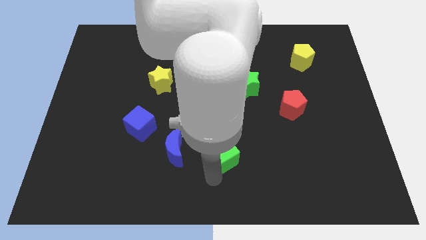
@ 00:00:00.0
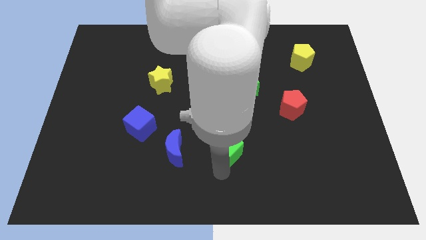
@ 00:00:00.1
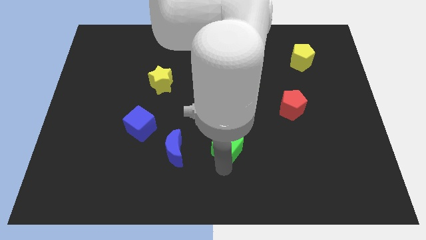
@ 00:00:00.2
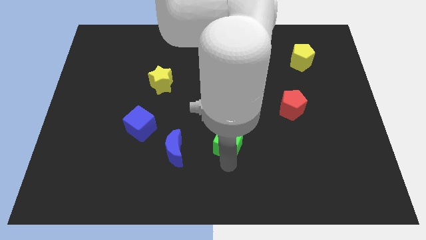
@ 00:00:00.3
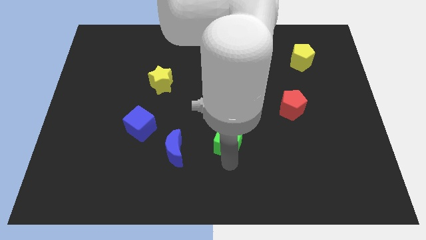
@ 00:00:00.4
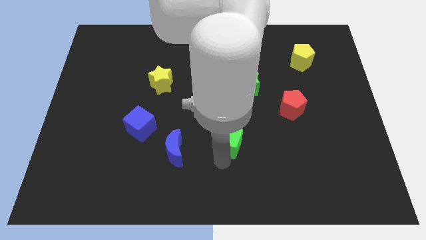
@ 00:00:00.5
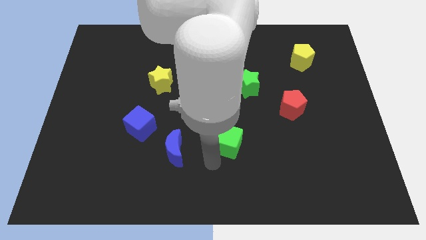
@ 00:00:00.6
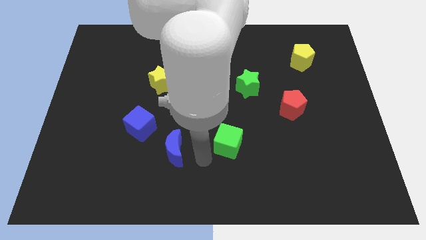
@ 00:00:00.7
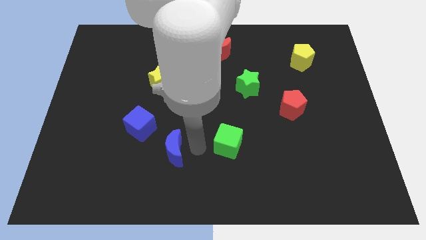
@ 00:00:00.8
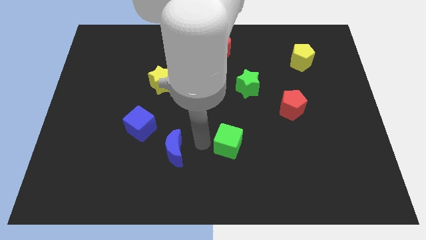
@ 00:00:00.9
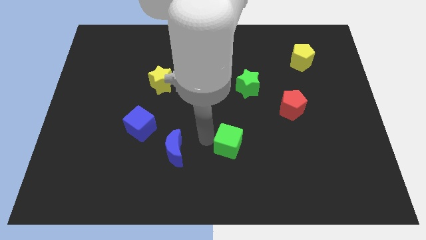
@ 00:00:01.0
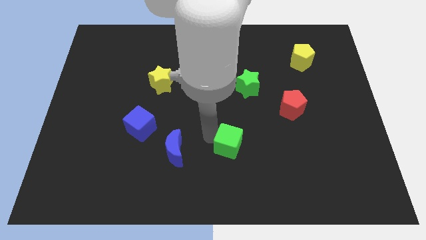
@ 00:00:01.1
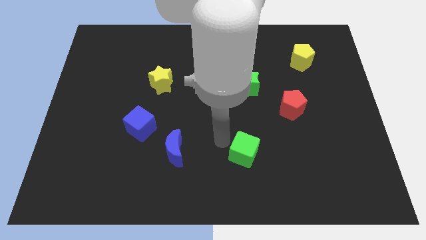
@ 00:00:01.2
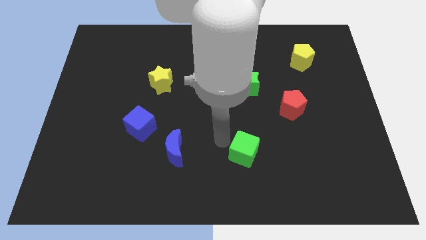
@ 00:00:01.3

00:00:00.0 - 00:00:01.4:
move the green cube diagonally

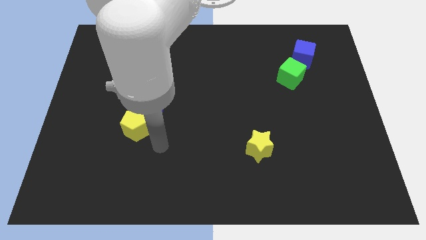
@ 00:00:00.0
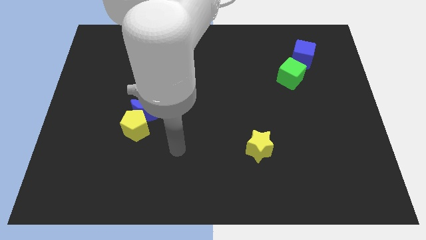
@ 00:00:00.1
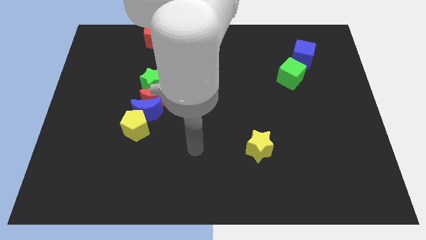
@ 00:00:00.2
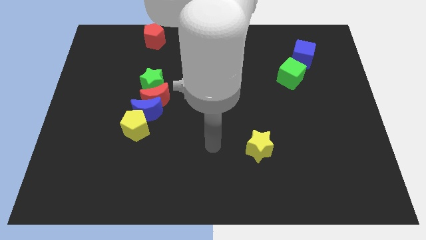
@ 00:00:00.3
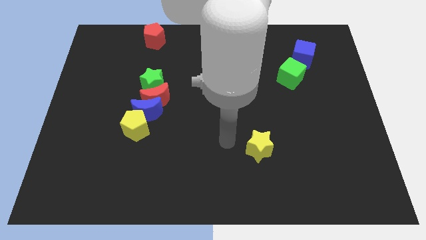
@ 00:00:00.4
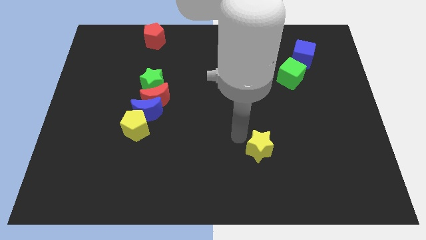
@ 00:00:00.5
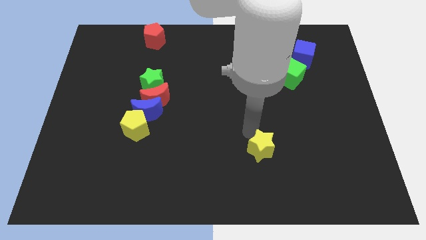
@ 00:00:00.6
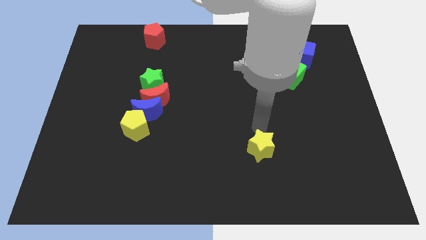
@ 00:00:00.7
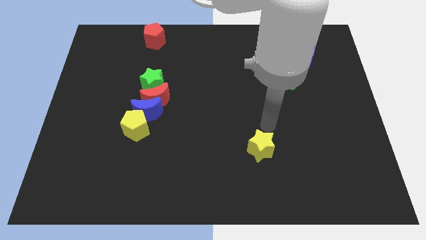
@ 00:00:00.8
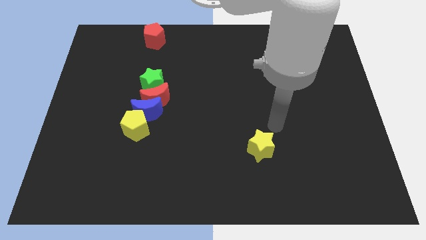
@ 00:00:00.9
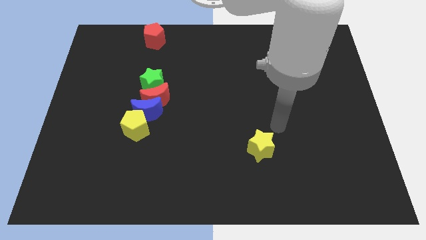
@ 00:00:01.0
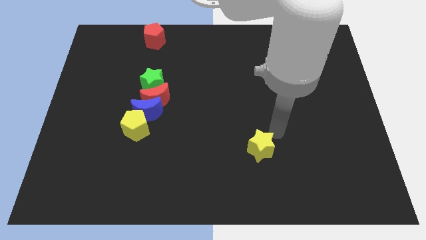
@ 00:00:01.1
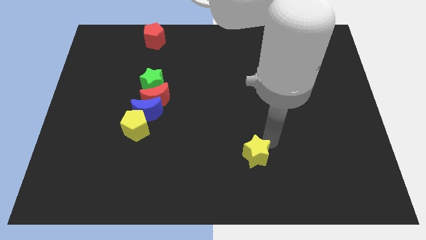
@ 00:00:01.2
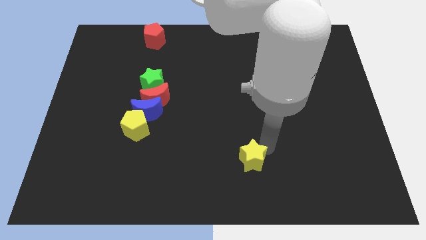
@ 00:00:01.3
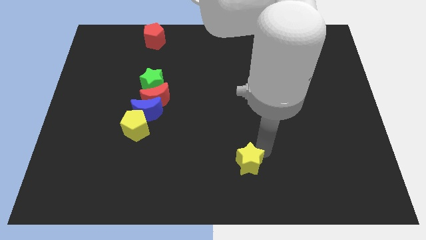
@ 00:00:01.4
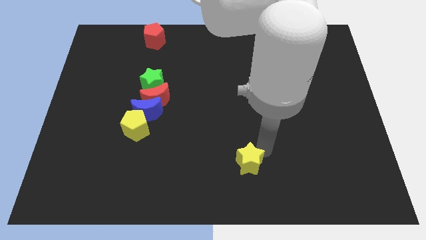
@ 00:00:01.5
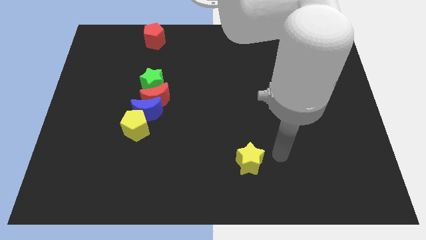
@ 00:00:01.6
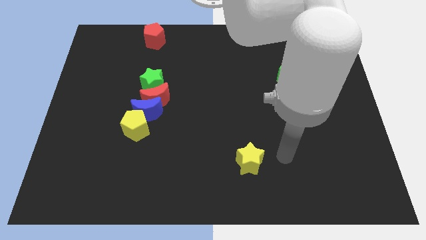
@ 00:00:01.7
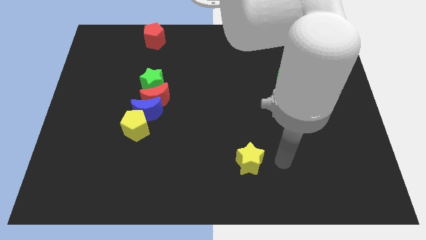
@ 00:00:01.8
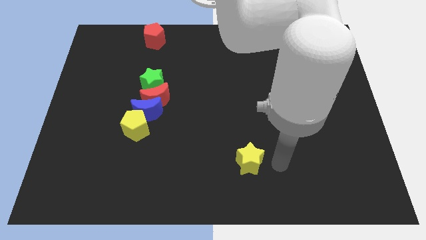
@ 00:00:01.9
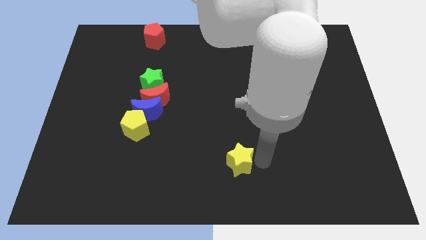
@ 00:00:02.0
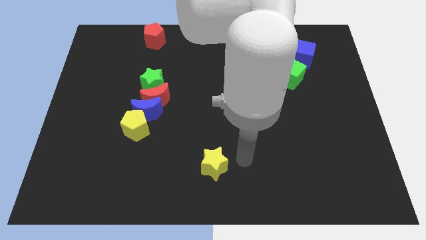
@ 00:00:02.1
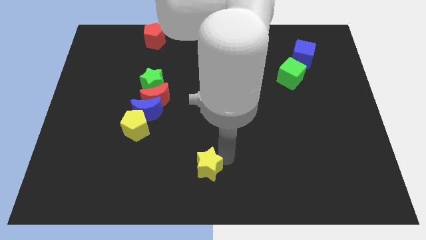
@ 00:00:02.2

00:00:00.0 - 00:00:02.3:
move the yellow star to the bottom center

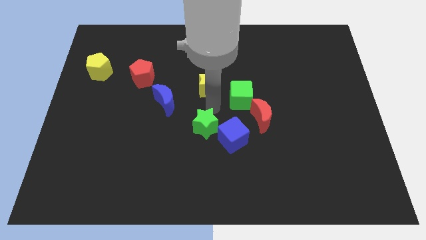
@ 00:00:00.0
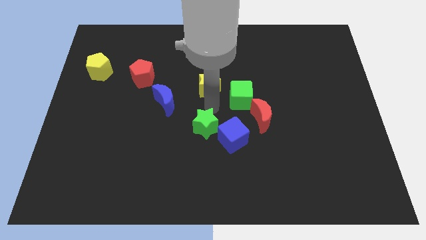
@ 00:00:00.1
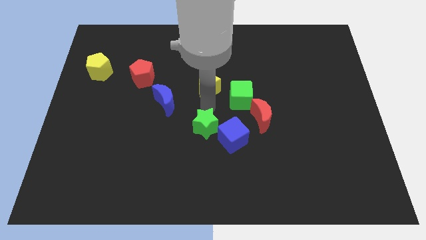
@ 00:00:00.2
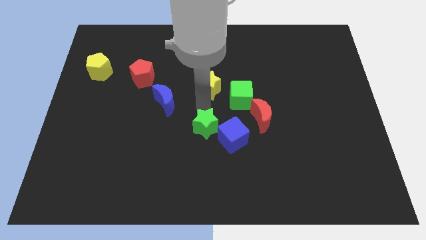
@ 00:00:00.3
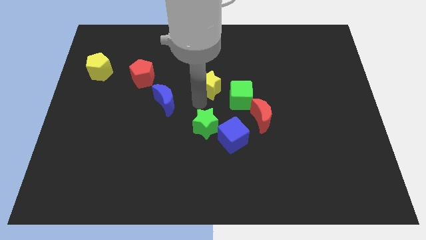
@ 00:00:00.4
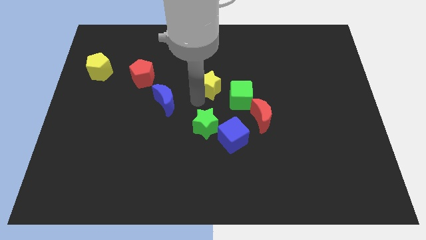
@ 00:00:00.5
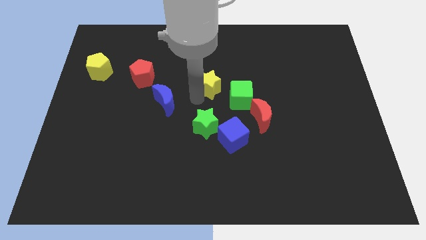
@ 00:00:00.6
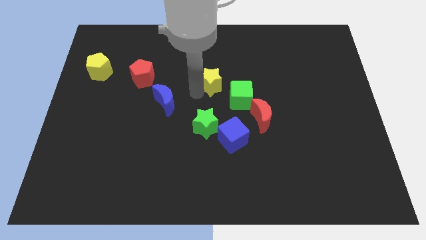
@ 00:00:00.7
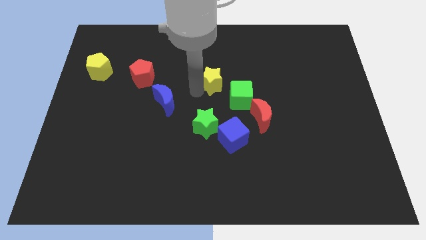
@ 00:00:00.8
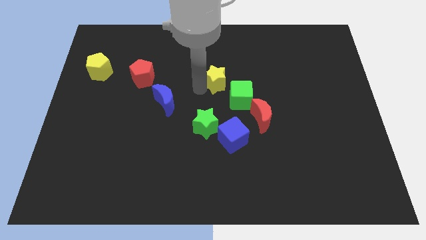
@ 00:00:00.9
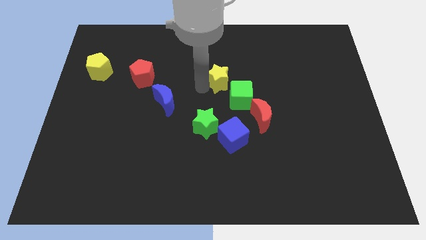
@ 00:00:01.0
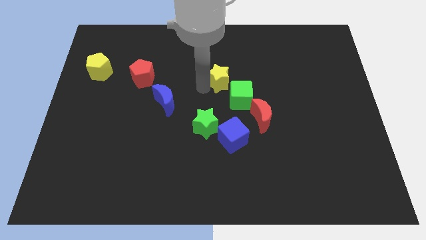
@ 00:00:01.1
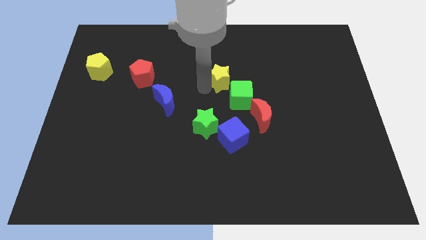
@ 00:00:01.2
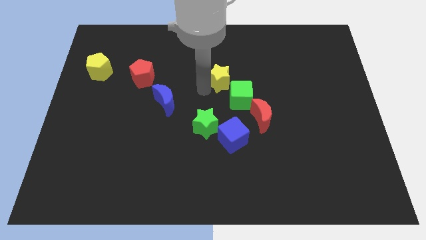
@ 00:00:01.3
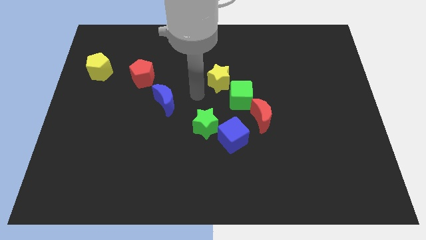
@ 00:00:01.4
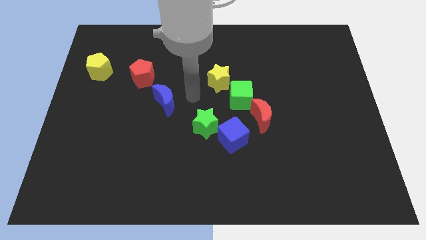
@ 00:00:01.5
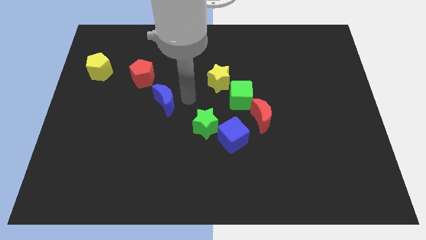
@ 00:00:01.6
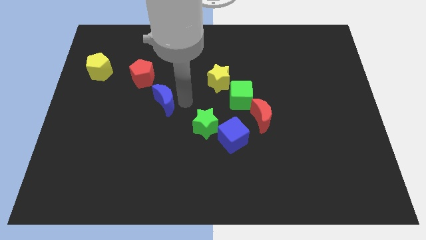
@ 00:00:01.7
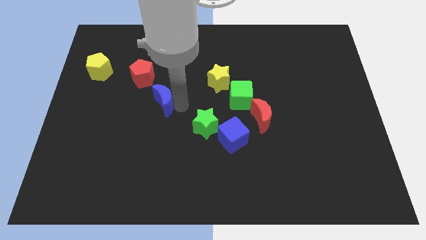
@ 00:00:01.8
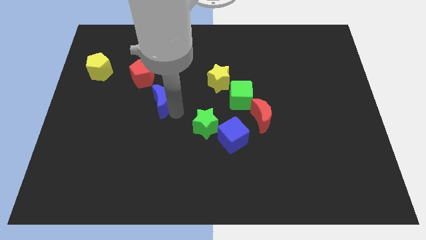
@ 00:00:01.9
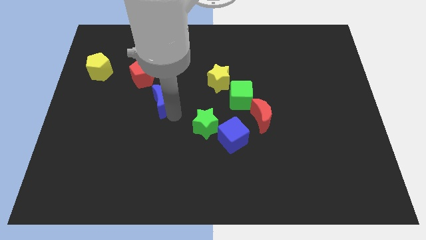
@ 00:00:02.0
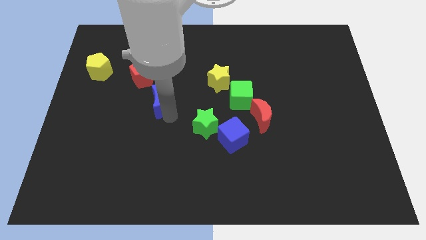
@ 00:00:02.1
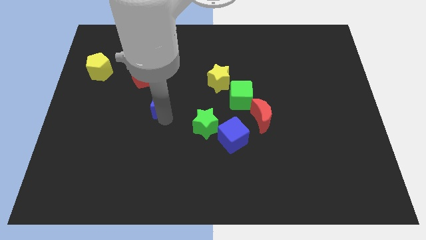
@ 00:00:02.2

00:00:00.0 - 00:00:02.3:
point yourself below blue moon

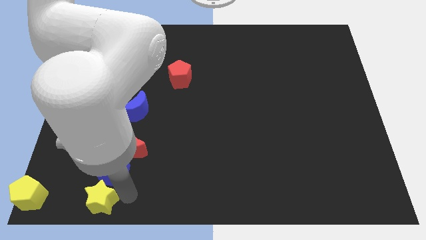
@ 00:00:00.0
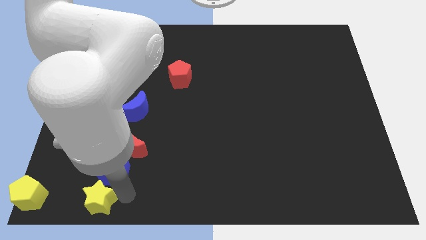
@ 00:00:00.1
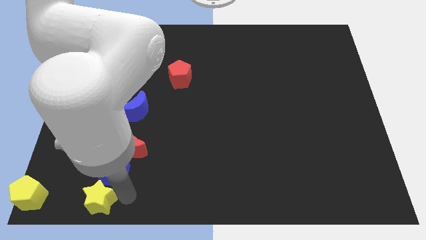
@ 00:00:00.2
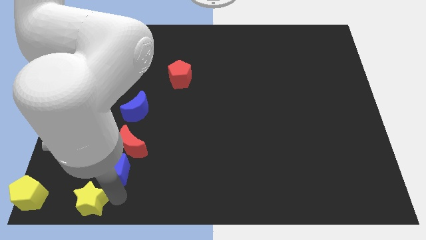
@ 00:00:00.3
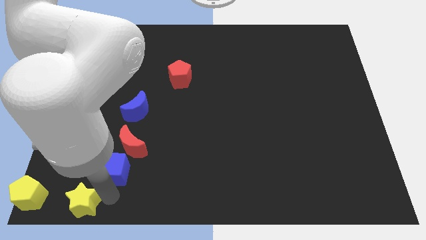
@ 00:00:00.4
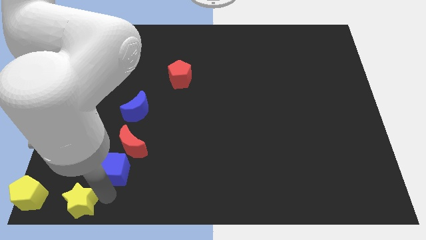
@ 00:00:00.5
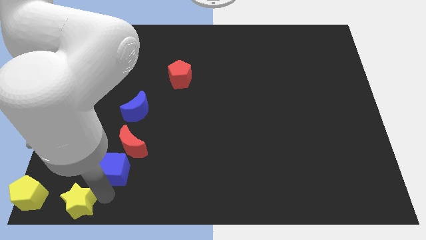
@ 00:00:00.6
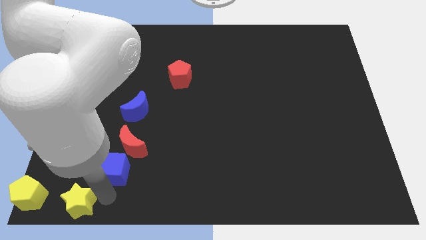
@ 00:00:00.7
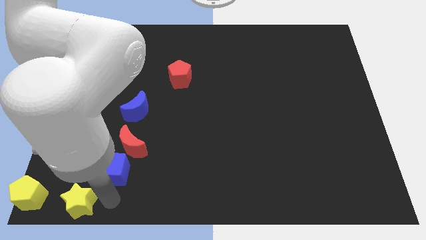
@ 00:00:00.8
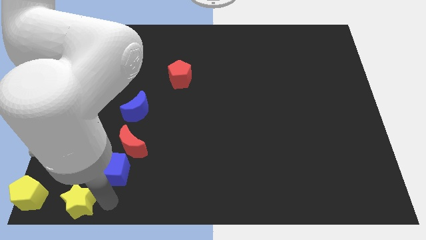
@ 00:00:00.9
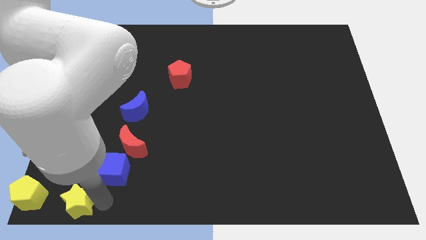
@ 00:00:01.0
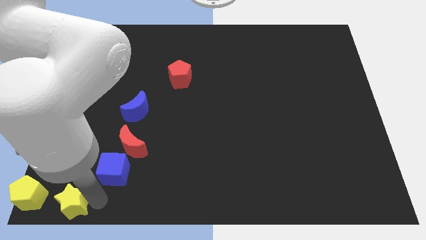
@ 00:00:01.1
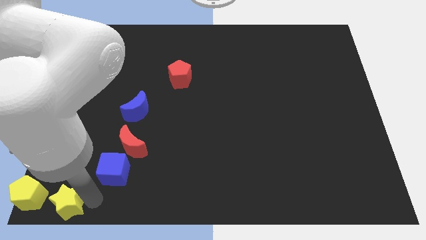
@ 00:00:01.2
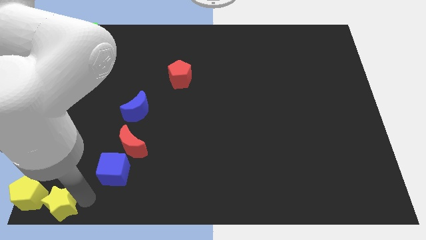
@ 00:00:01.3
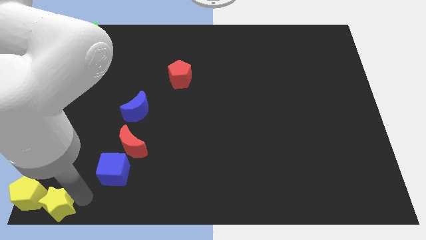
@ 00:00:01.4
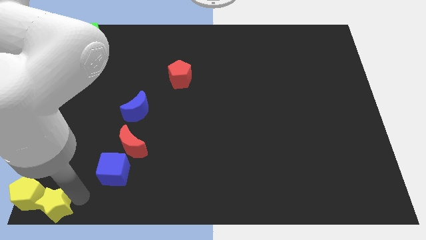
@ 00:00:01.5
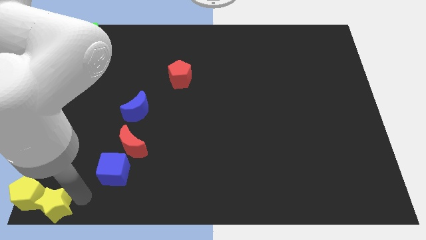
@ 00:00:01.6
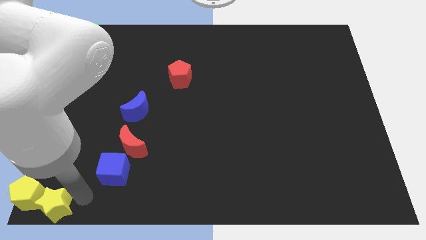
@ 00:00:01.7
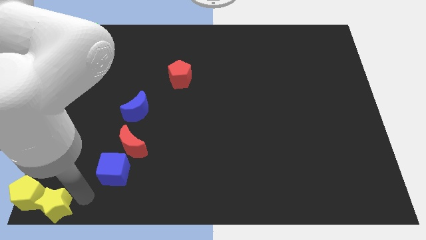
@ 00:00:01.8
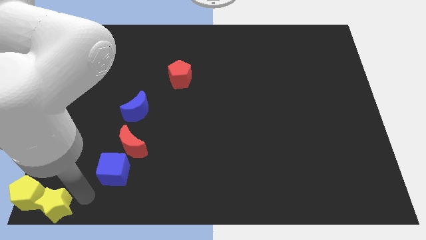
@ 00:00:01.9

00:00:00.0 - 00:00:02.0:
move the yellow star towards the bottom left

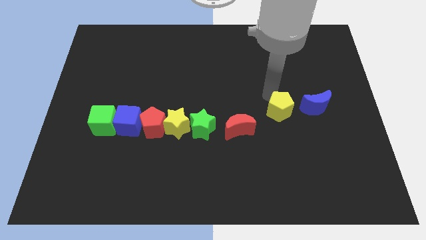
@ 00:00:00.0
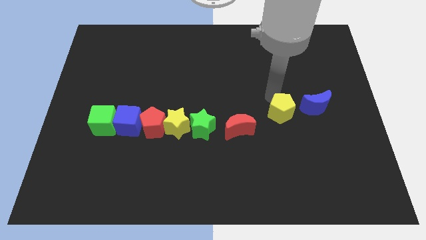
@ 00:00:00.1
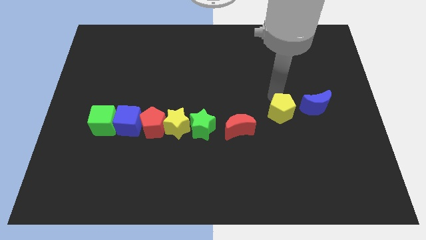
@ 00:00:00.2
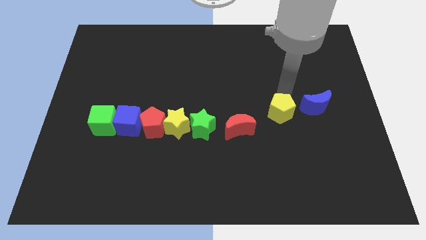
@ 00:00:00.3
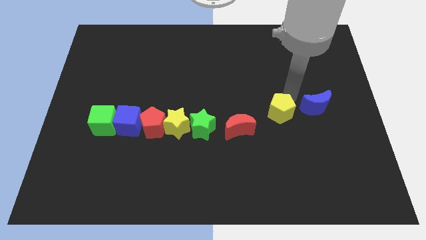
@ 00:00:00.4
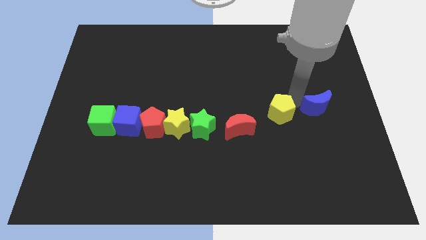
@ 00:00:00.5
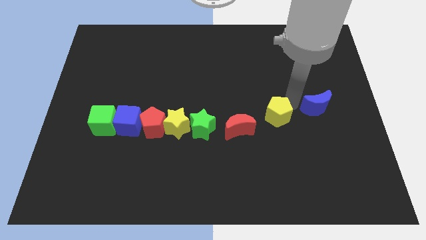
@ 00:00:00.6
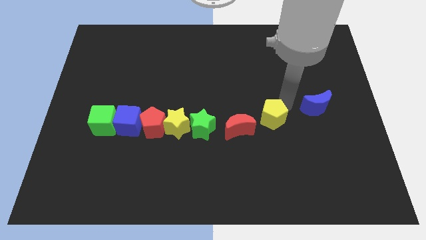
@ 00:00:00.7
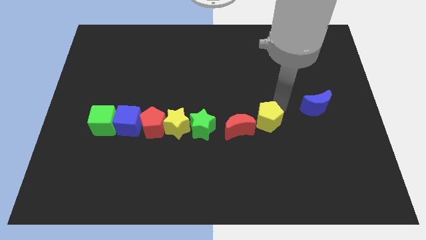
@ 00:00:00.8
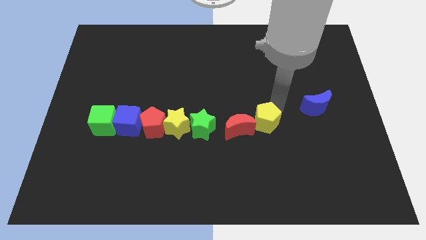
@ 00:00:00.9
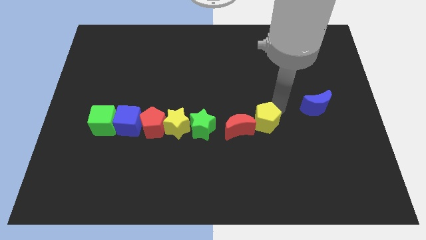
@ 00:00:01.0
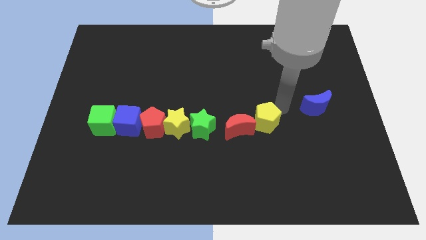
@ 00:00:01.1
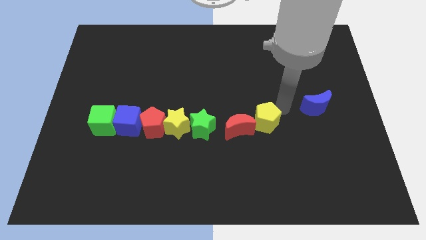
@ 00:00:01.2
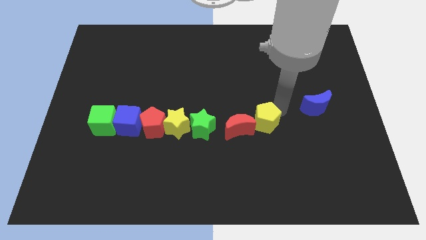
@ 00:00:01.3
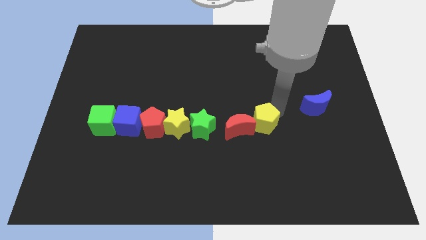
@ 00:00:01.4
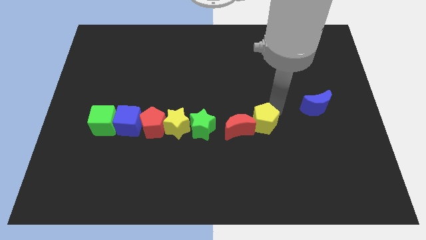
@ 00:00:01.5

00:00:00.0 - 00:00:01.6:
move the yellow pentagon to the right of the red crescent
